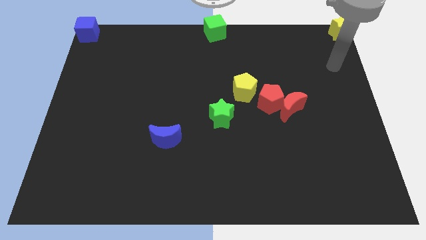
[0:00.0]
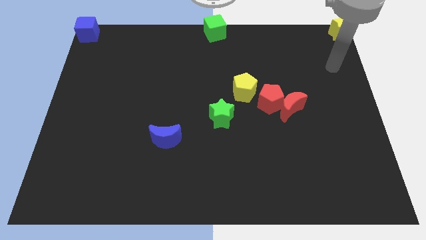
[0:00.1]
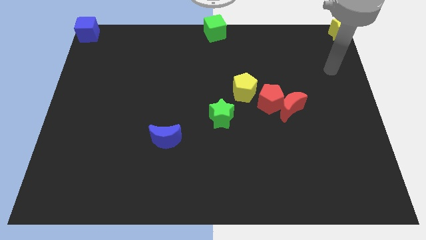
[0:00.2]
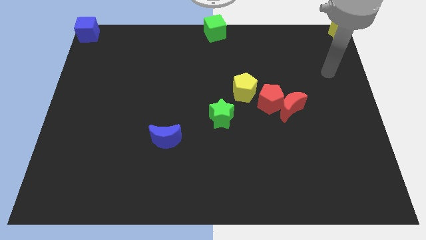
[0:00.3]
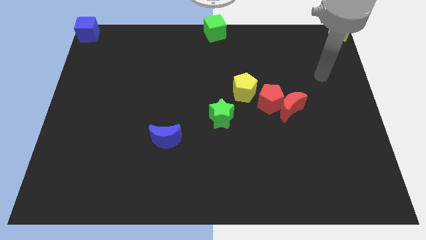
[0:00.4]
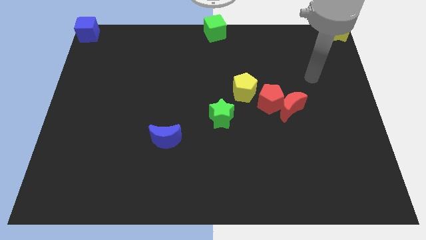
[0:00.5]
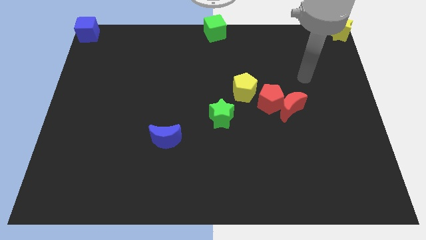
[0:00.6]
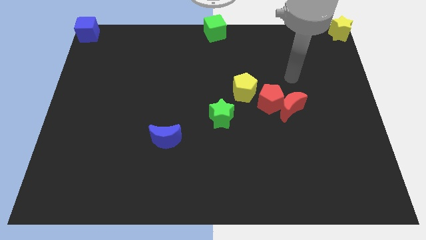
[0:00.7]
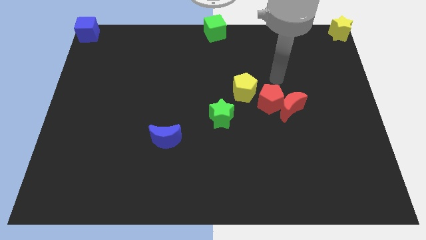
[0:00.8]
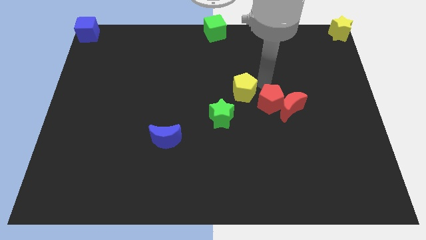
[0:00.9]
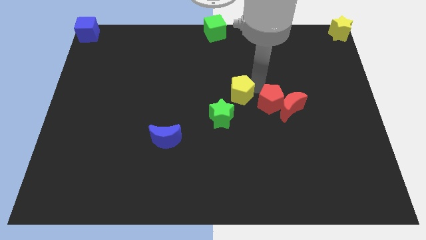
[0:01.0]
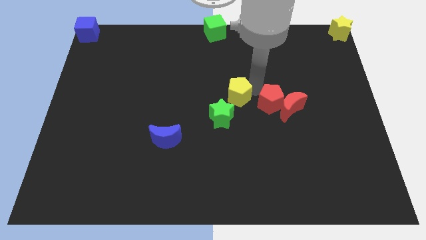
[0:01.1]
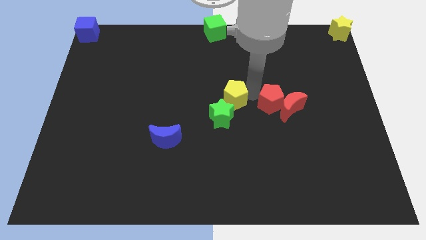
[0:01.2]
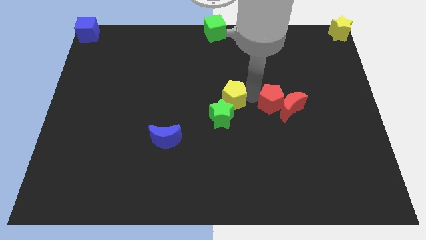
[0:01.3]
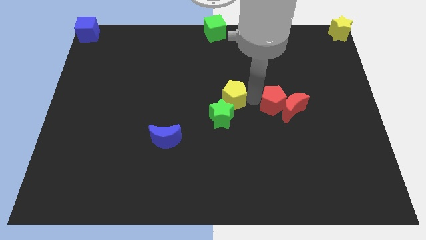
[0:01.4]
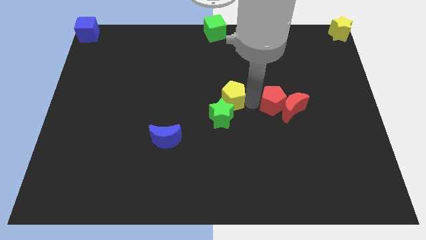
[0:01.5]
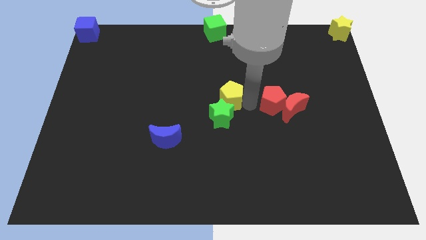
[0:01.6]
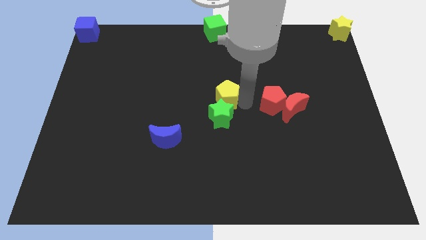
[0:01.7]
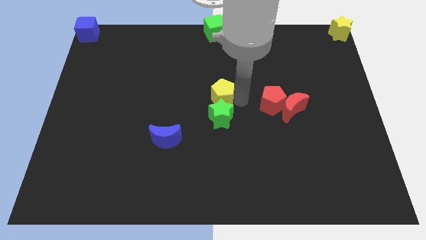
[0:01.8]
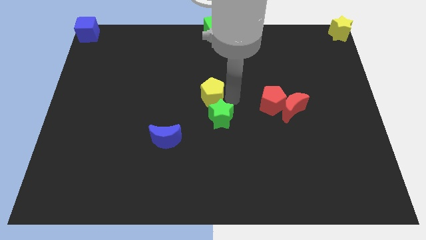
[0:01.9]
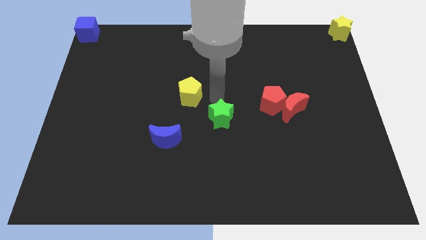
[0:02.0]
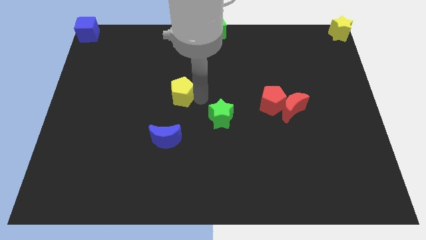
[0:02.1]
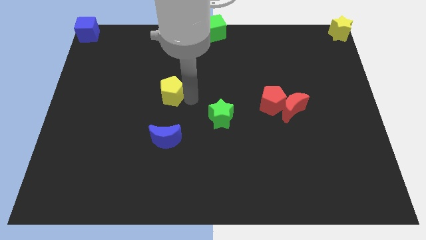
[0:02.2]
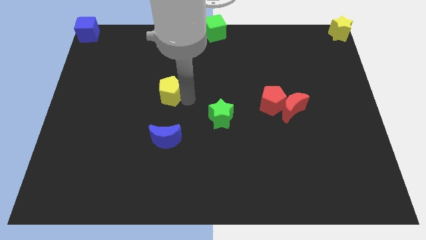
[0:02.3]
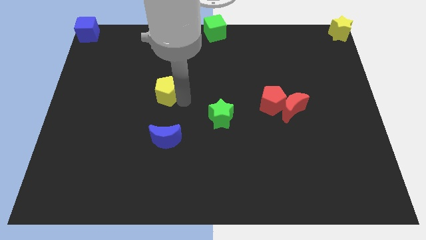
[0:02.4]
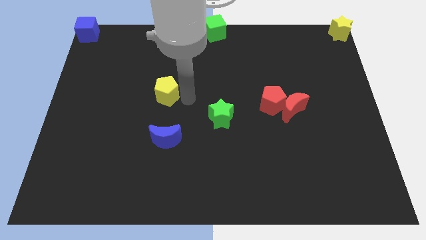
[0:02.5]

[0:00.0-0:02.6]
move the yellow pentagon towards the left

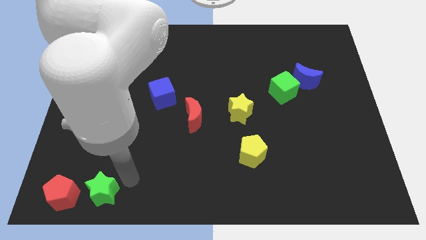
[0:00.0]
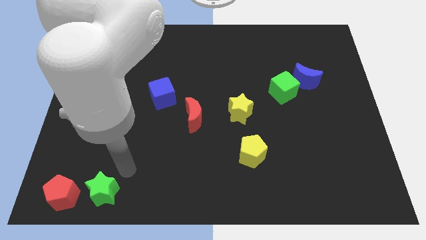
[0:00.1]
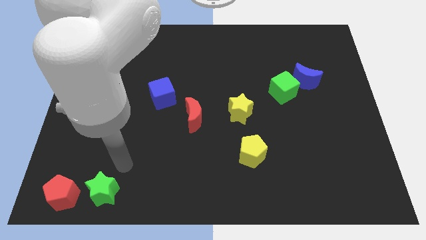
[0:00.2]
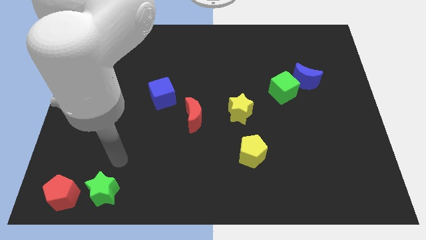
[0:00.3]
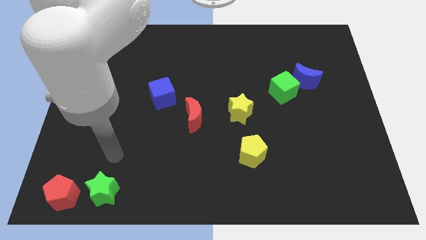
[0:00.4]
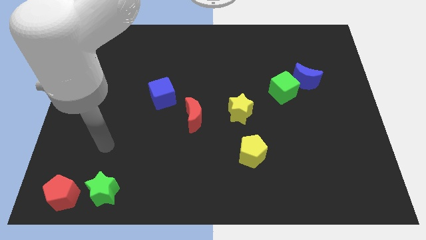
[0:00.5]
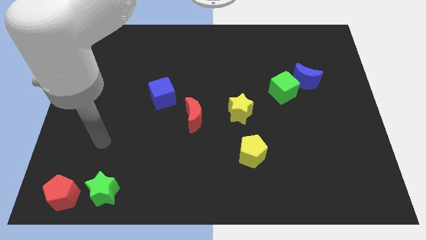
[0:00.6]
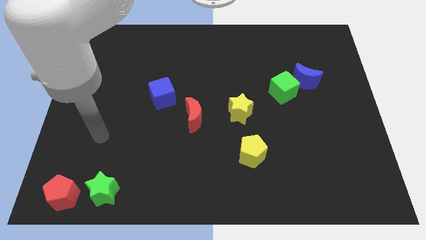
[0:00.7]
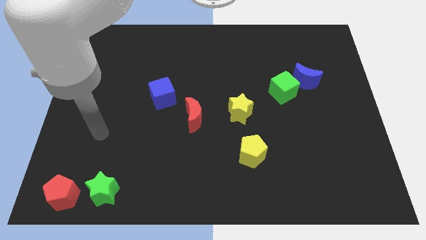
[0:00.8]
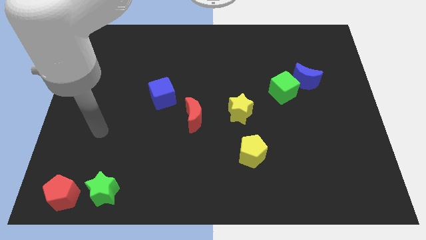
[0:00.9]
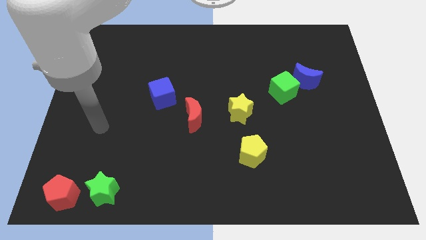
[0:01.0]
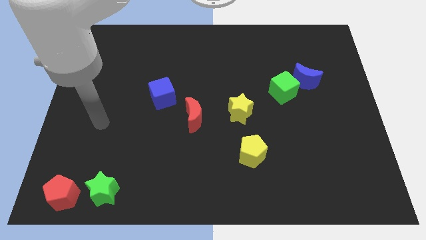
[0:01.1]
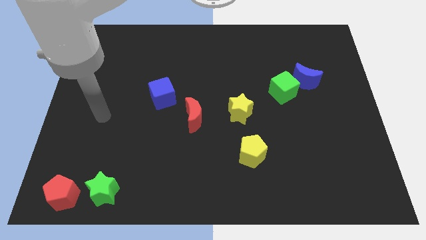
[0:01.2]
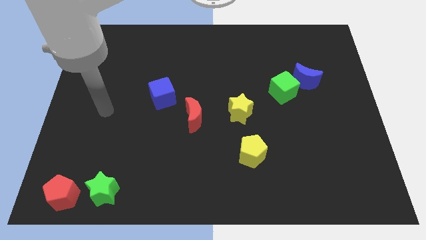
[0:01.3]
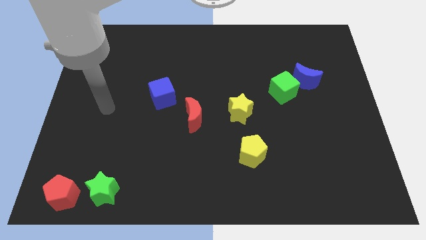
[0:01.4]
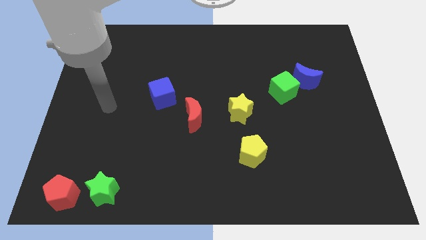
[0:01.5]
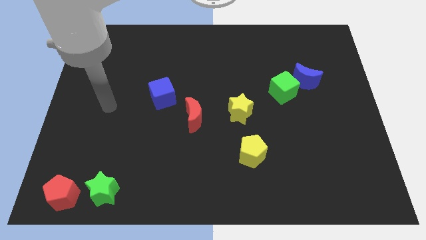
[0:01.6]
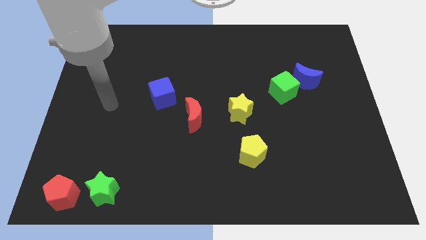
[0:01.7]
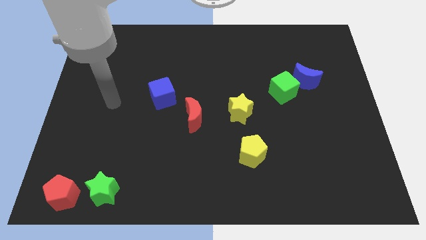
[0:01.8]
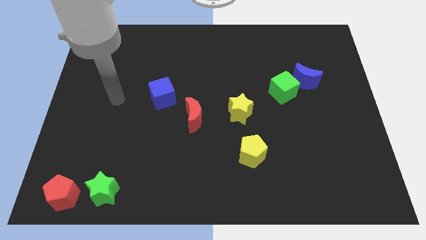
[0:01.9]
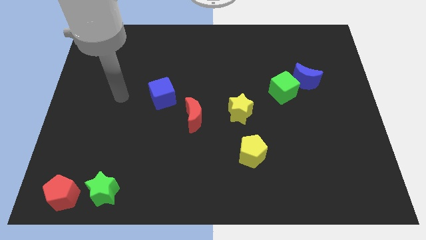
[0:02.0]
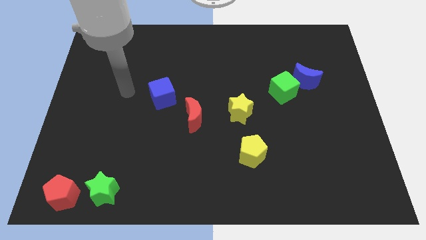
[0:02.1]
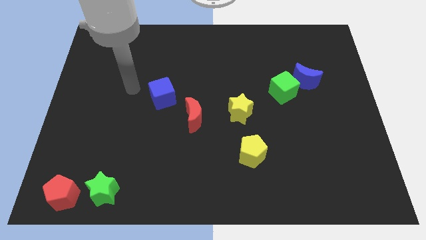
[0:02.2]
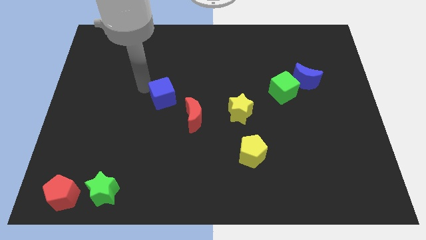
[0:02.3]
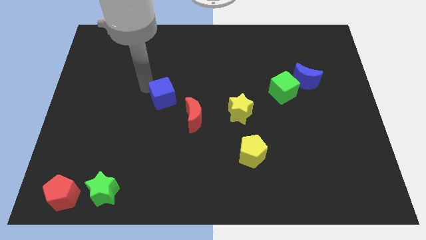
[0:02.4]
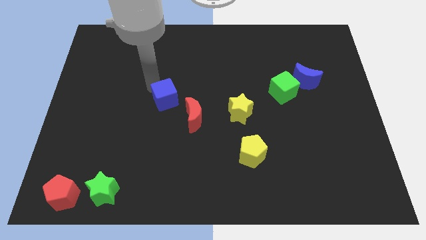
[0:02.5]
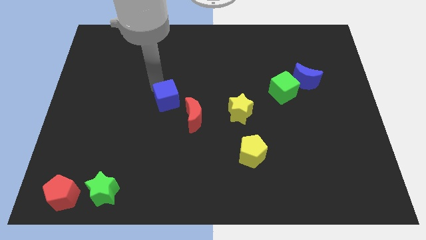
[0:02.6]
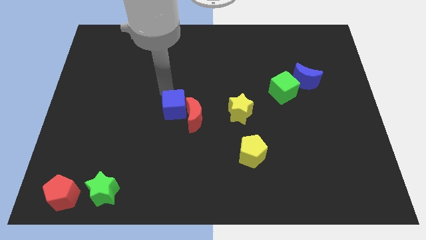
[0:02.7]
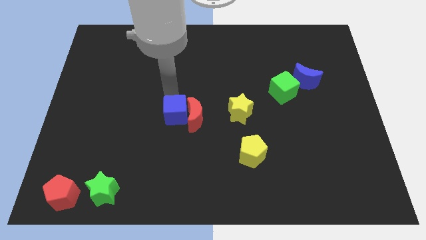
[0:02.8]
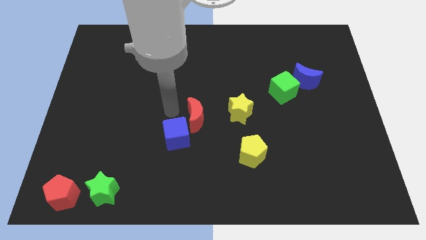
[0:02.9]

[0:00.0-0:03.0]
move the blue cube towards the left to red crescent

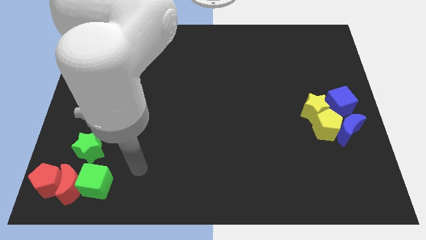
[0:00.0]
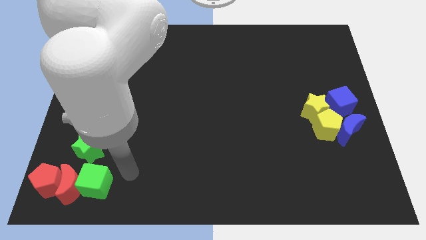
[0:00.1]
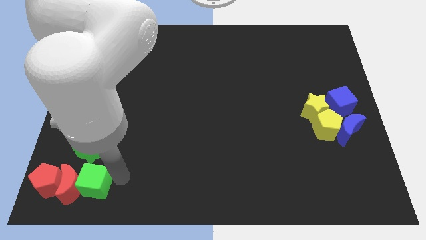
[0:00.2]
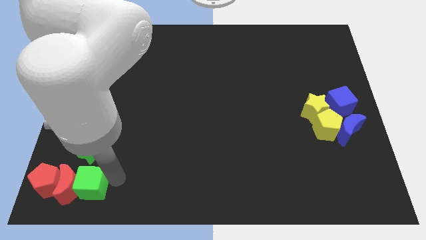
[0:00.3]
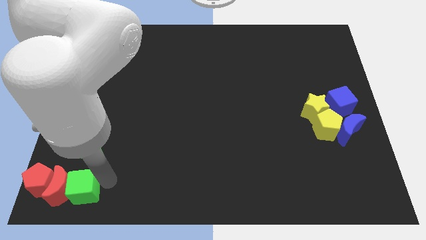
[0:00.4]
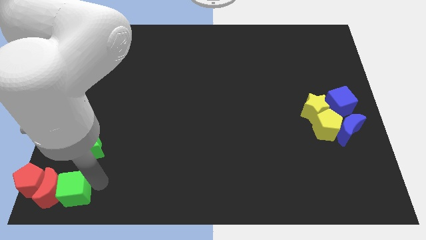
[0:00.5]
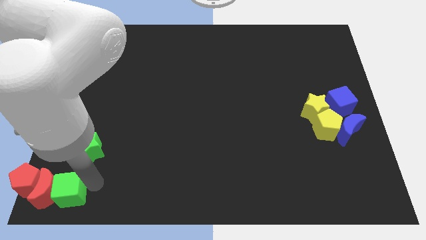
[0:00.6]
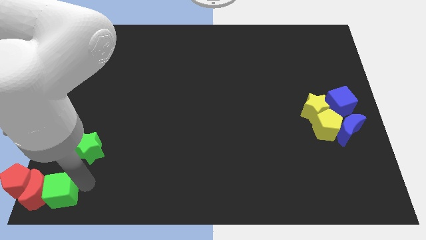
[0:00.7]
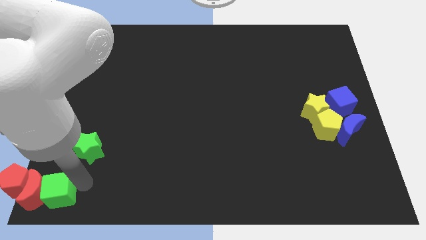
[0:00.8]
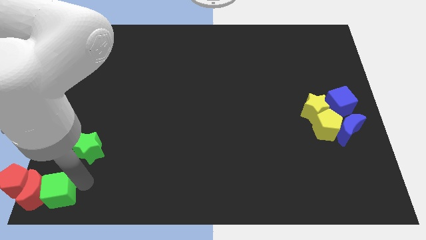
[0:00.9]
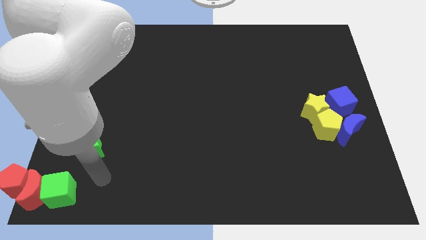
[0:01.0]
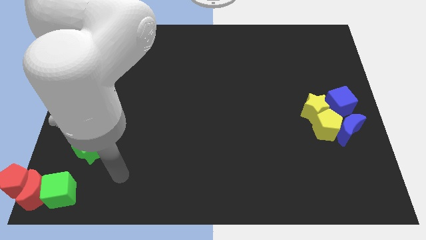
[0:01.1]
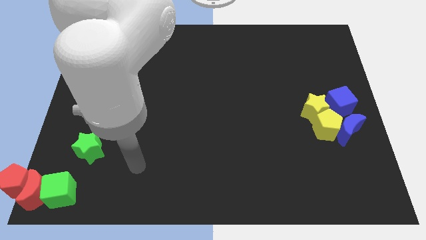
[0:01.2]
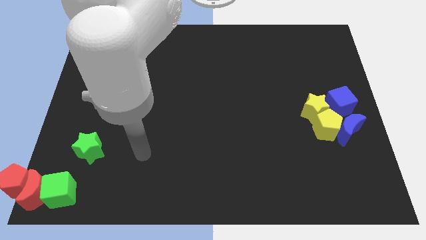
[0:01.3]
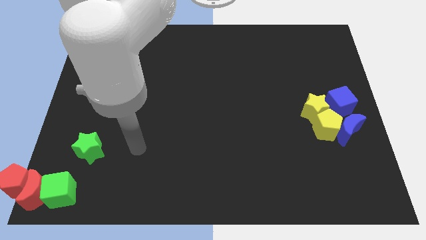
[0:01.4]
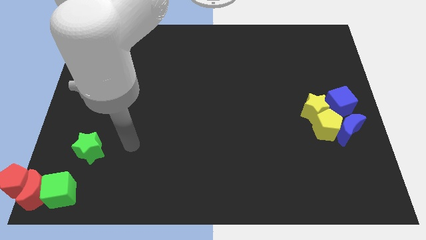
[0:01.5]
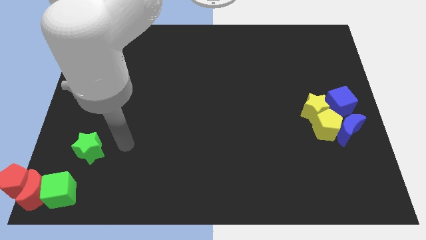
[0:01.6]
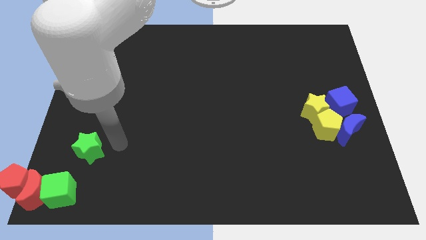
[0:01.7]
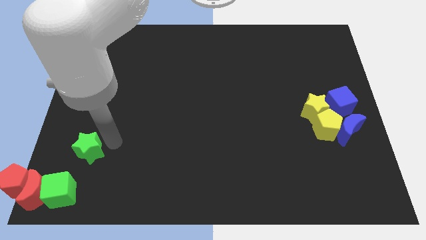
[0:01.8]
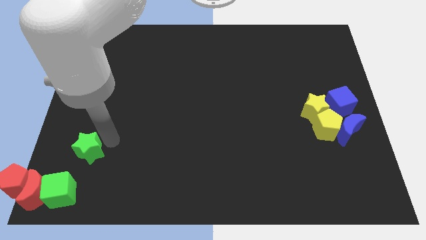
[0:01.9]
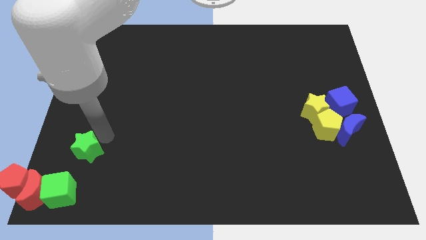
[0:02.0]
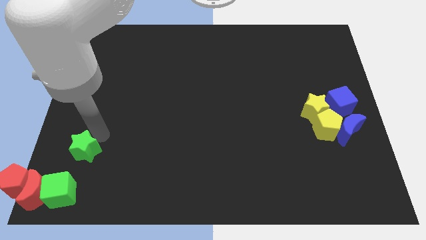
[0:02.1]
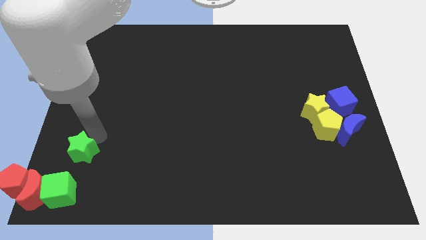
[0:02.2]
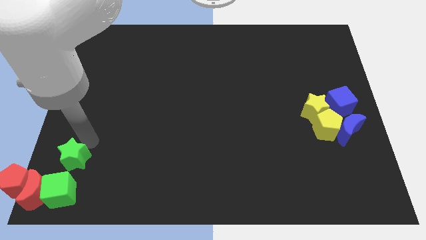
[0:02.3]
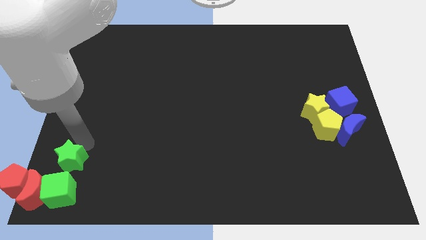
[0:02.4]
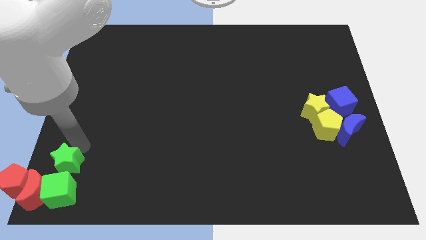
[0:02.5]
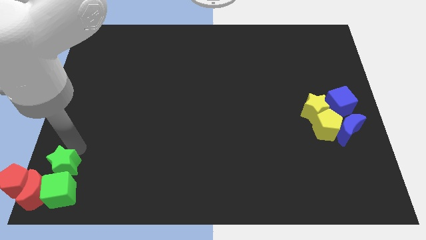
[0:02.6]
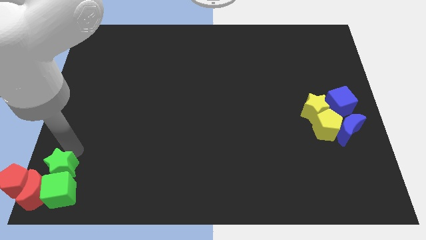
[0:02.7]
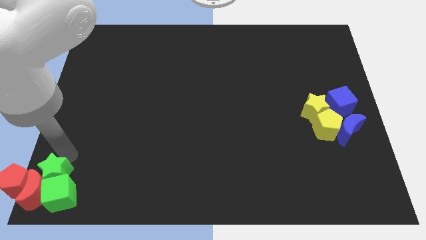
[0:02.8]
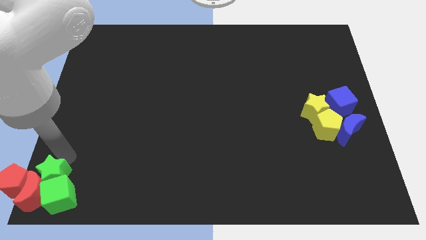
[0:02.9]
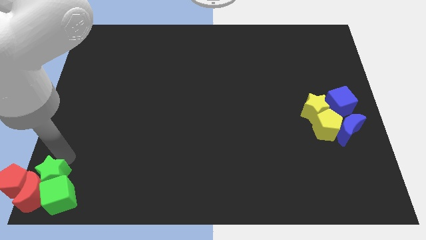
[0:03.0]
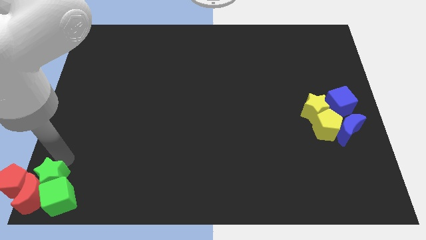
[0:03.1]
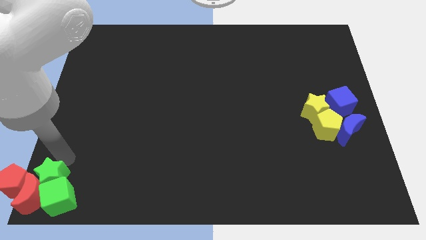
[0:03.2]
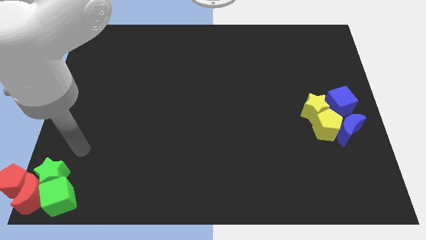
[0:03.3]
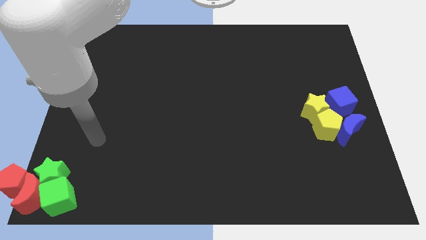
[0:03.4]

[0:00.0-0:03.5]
place the red and green blocks together at bottom left corner of the board

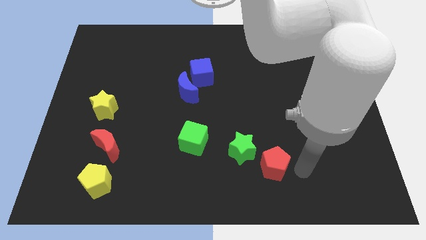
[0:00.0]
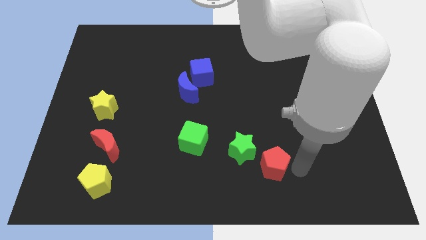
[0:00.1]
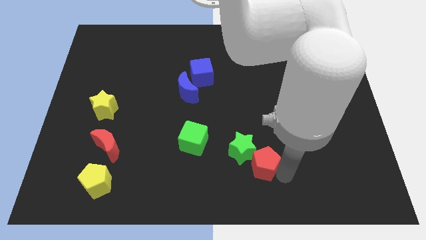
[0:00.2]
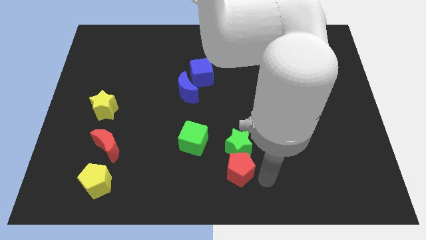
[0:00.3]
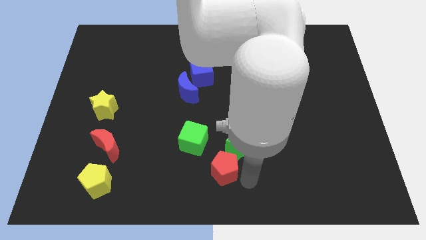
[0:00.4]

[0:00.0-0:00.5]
push red pentagon below green star
